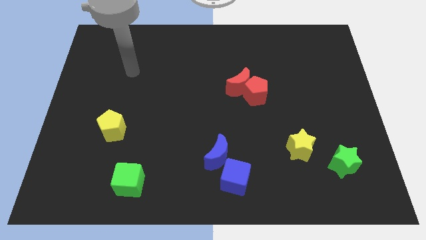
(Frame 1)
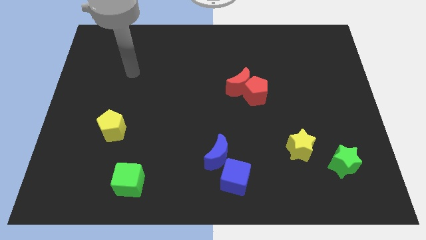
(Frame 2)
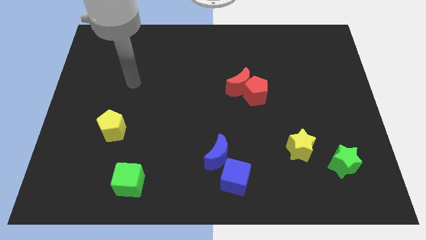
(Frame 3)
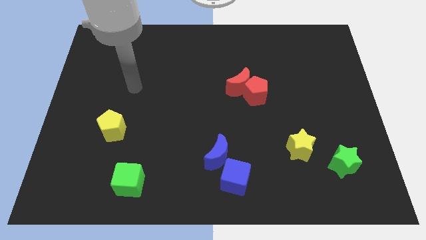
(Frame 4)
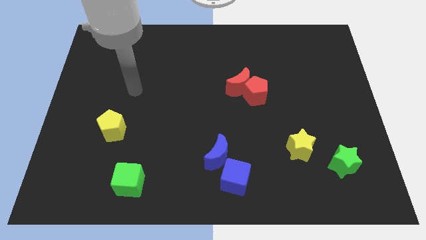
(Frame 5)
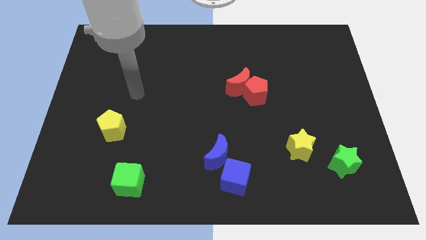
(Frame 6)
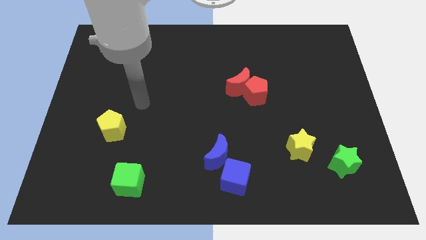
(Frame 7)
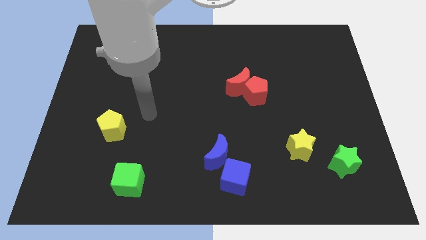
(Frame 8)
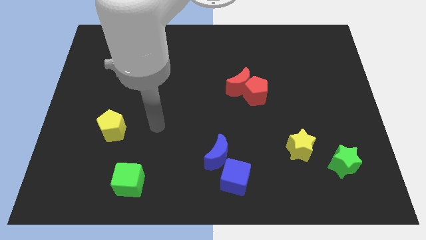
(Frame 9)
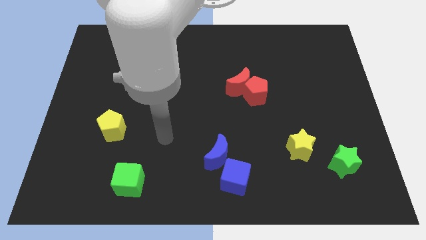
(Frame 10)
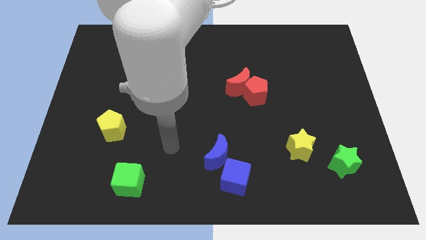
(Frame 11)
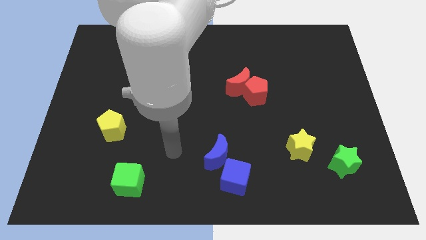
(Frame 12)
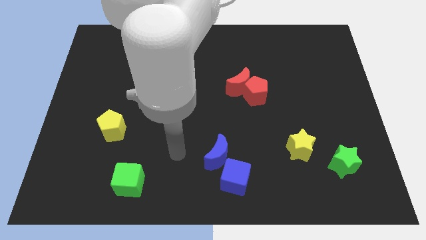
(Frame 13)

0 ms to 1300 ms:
point your arm between blue crescent and green cube

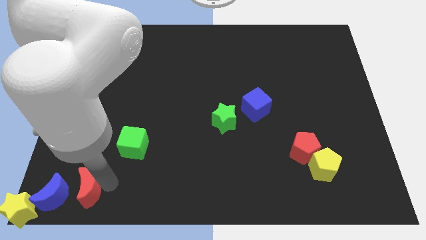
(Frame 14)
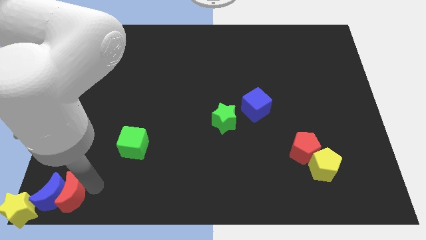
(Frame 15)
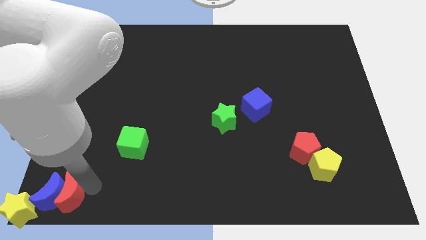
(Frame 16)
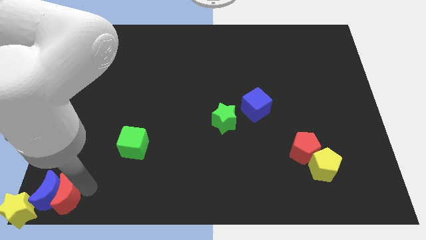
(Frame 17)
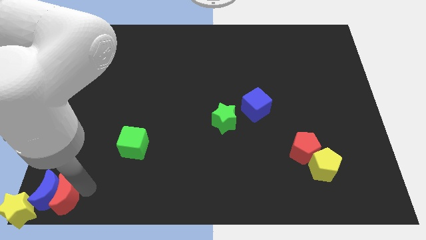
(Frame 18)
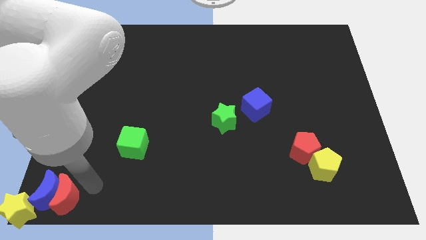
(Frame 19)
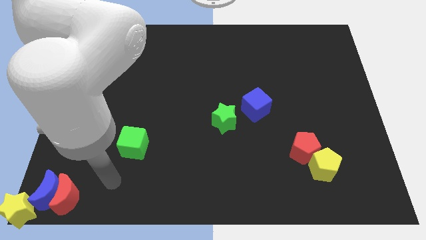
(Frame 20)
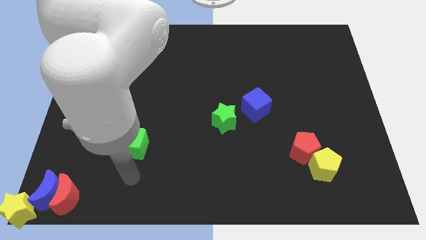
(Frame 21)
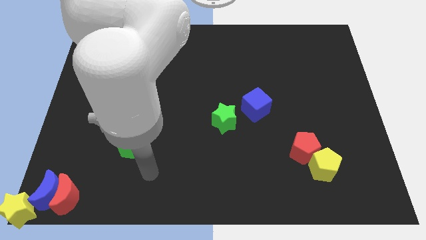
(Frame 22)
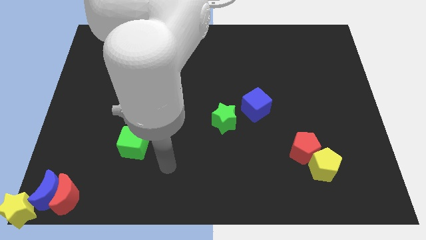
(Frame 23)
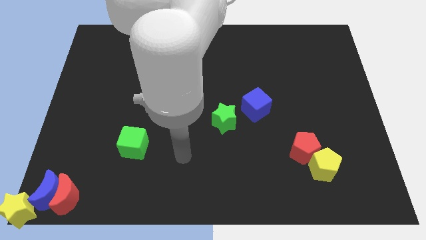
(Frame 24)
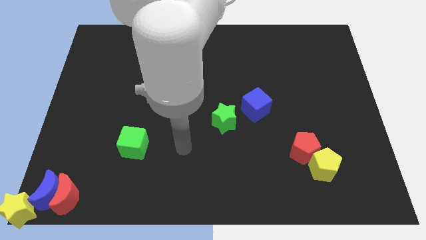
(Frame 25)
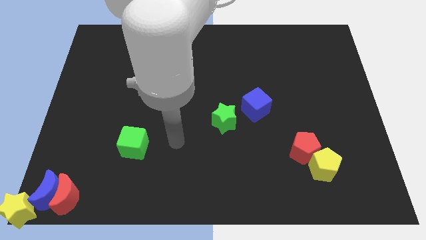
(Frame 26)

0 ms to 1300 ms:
push the red moon into the blue cube

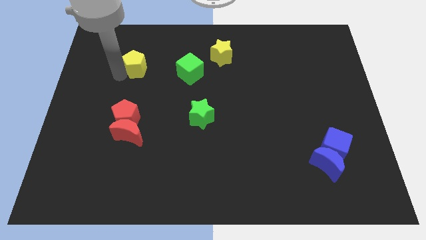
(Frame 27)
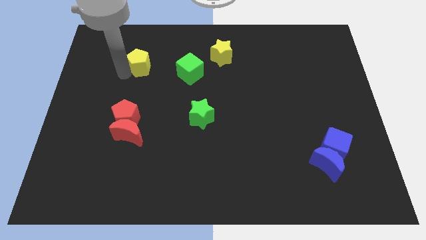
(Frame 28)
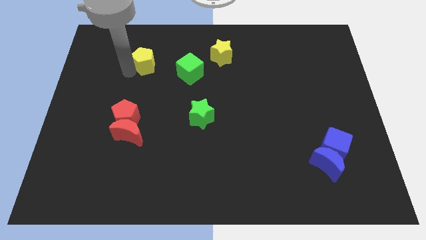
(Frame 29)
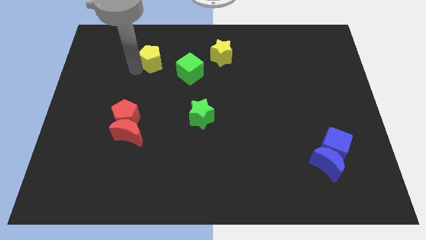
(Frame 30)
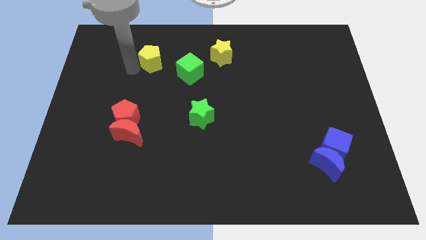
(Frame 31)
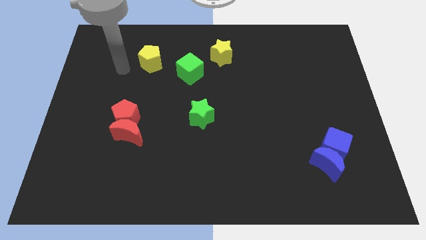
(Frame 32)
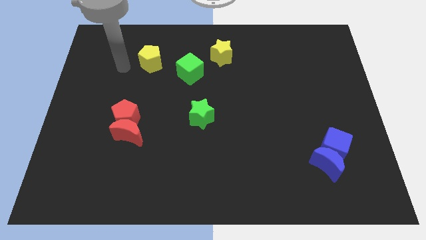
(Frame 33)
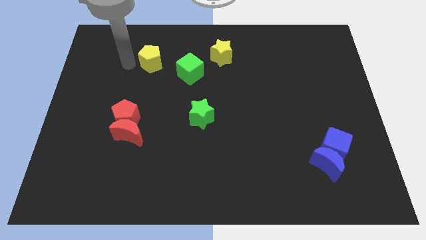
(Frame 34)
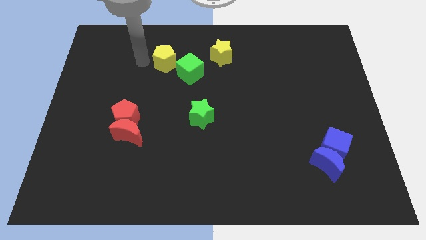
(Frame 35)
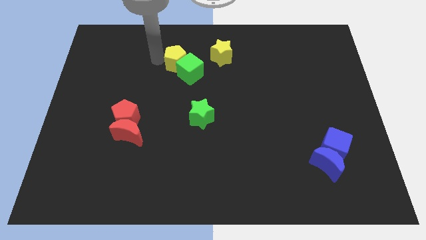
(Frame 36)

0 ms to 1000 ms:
place the yellow pentagon above the green cube

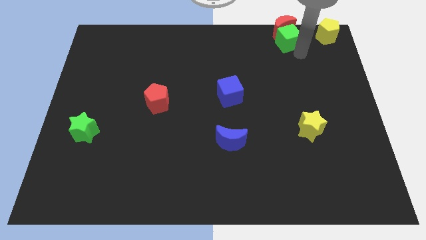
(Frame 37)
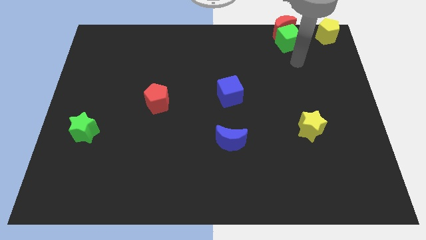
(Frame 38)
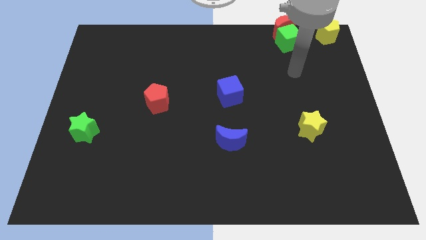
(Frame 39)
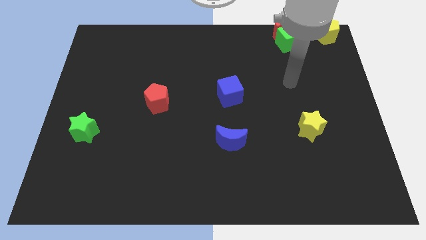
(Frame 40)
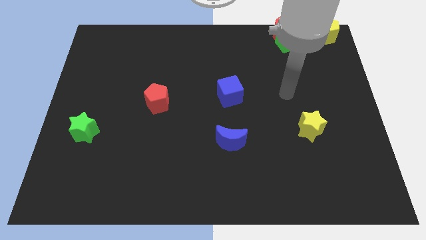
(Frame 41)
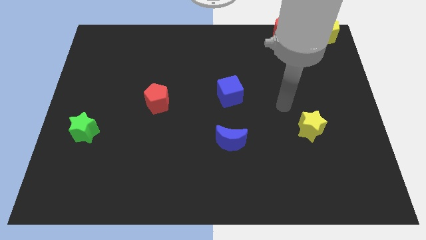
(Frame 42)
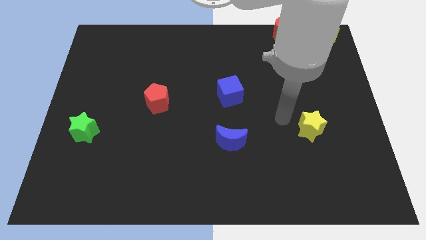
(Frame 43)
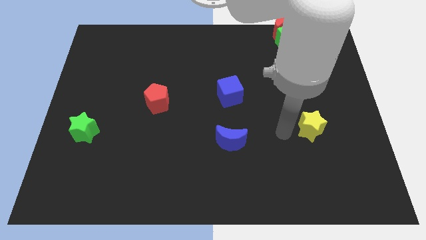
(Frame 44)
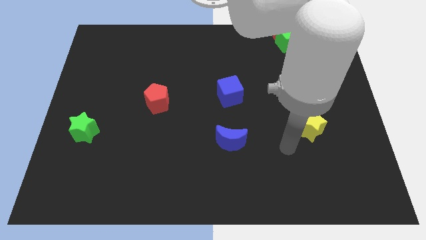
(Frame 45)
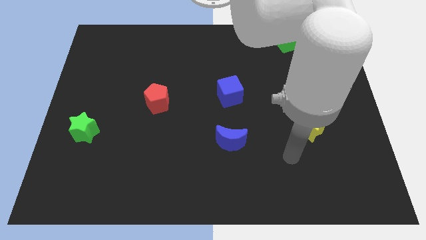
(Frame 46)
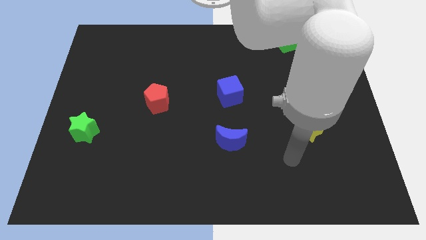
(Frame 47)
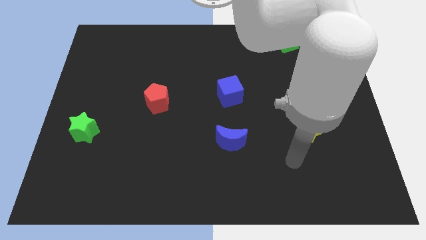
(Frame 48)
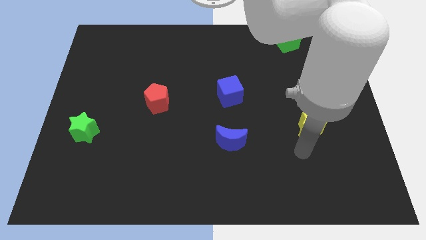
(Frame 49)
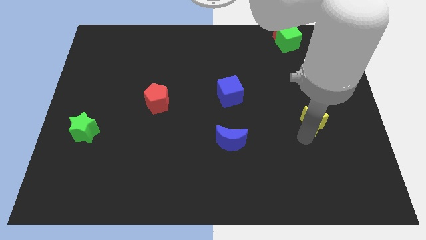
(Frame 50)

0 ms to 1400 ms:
move your hand towards the yellow star

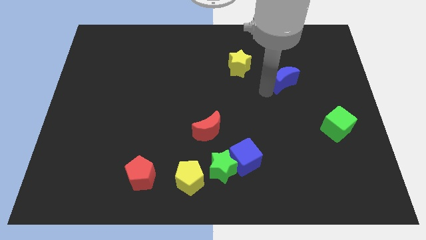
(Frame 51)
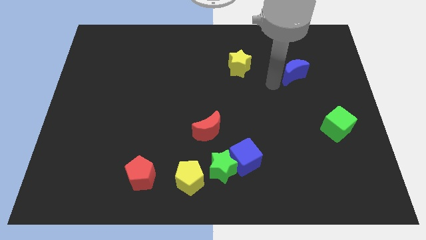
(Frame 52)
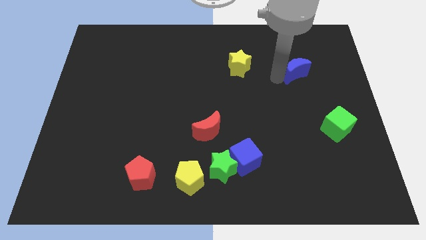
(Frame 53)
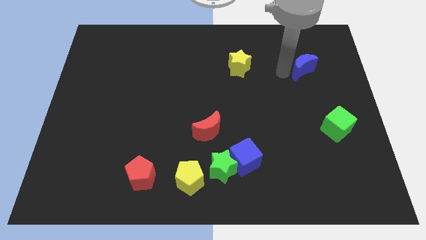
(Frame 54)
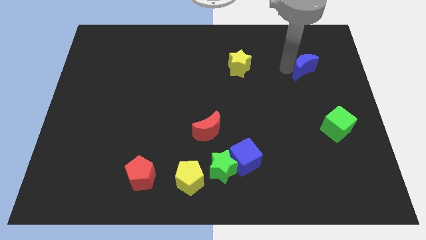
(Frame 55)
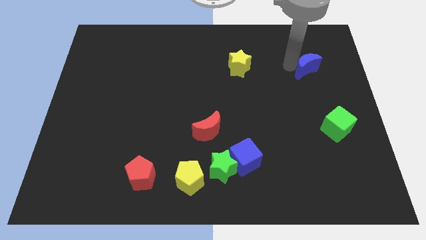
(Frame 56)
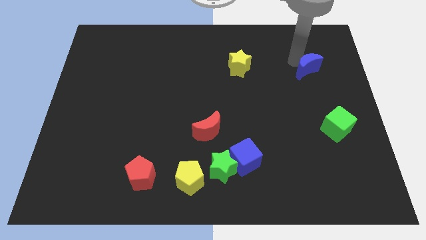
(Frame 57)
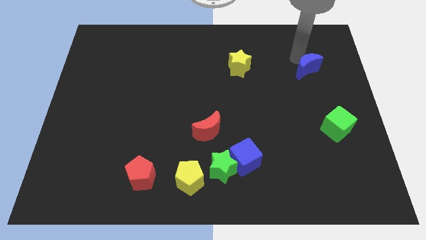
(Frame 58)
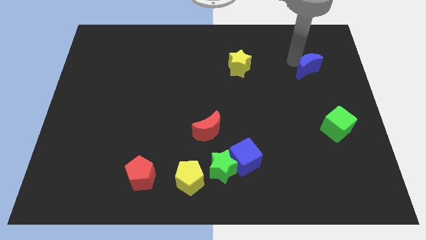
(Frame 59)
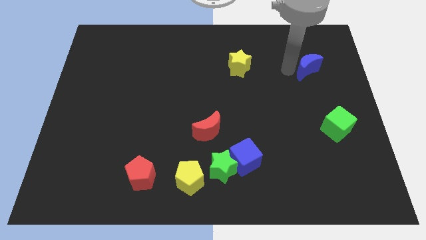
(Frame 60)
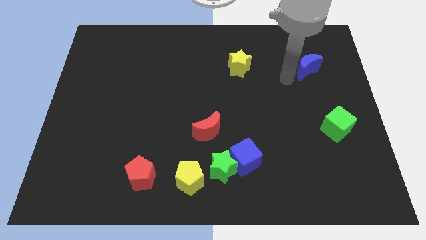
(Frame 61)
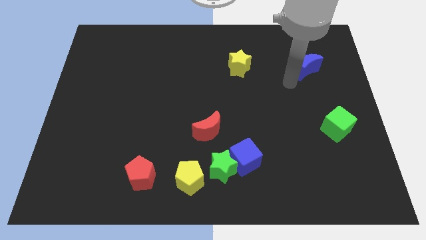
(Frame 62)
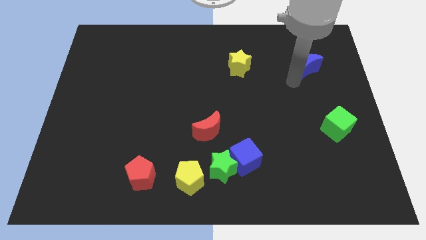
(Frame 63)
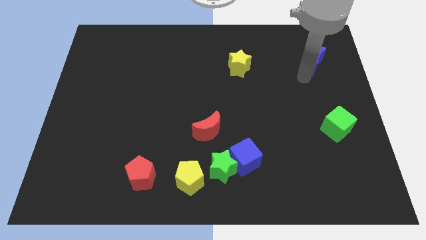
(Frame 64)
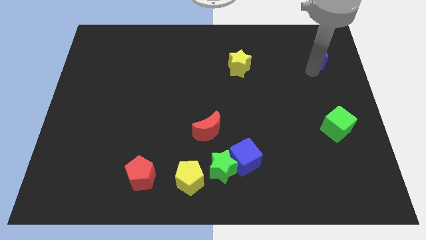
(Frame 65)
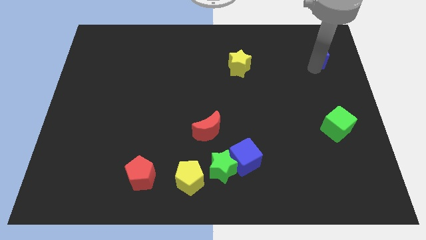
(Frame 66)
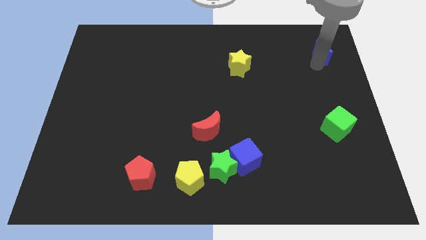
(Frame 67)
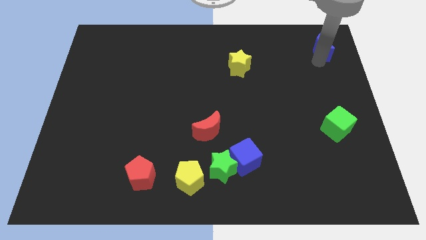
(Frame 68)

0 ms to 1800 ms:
push the blue crescent slightly towards the top right corner

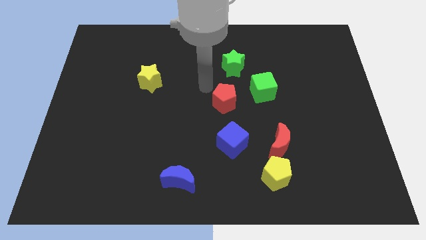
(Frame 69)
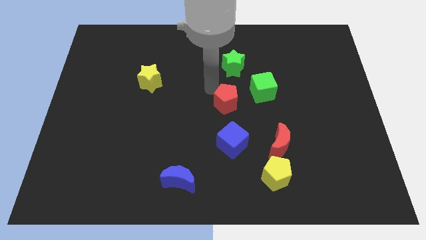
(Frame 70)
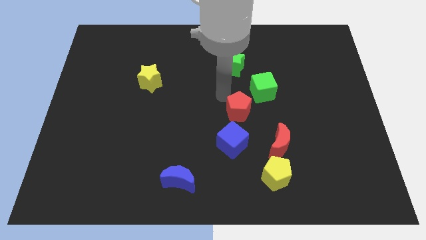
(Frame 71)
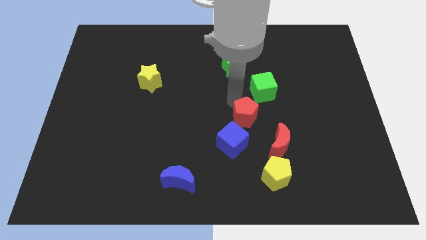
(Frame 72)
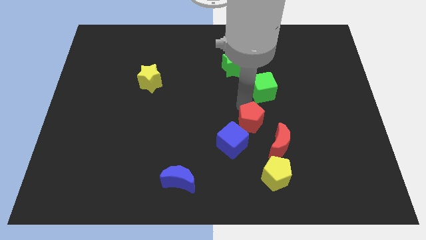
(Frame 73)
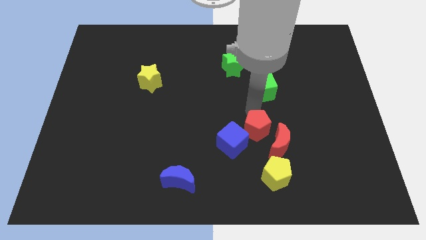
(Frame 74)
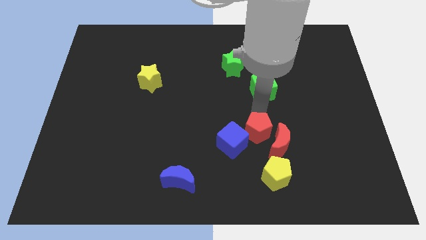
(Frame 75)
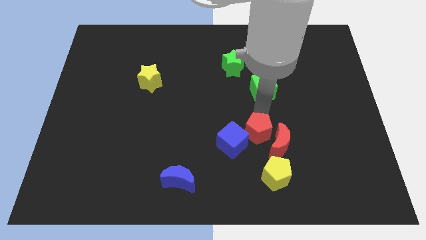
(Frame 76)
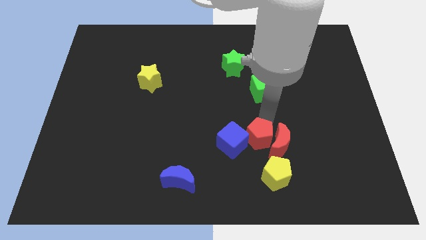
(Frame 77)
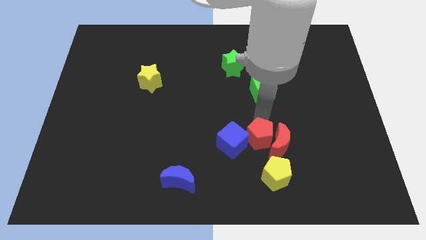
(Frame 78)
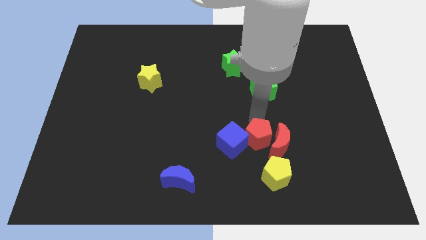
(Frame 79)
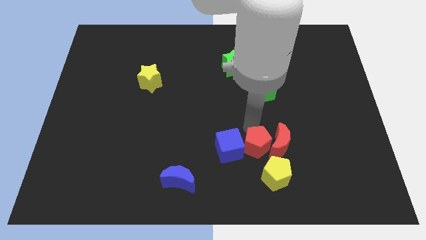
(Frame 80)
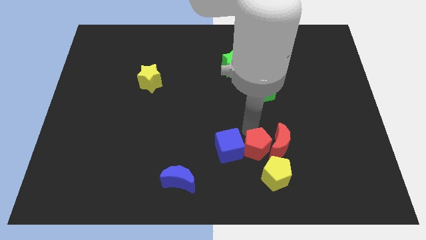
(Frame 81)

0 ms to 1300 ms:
place the red pentagon right to the blue cube

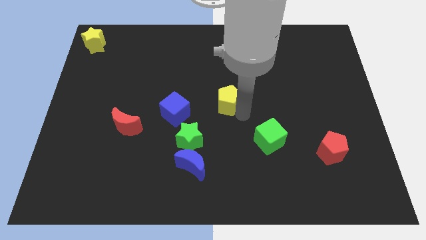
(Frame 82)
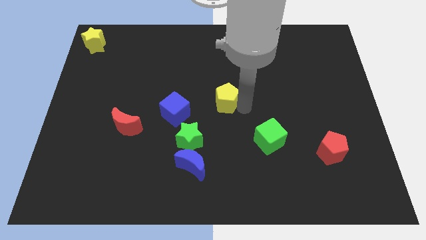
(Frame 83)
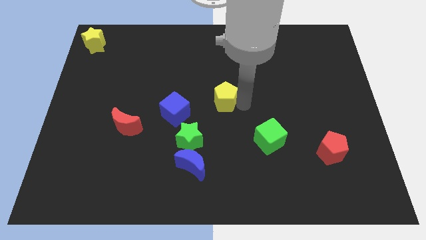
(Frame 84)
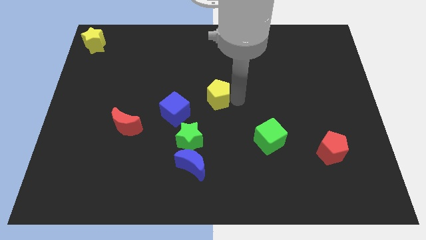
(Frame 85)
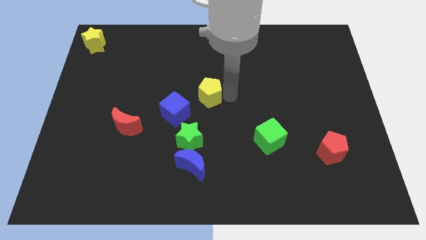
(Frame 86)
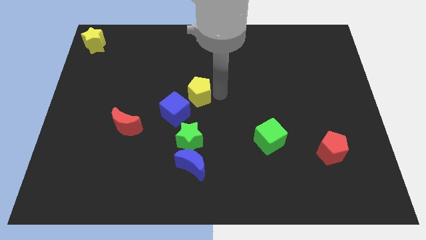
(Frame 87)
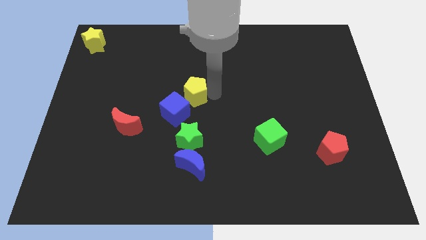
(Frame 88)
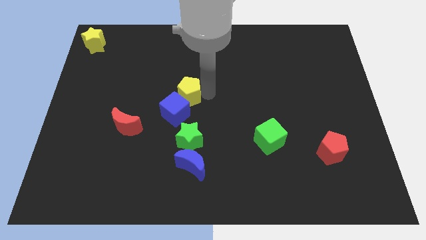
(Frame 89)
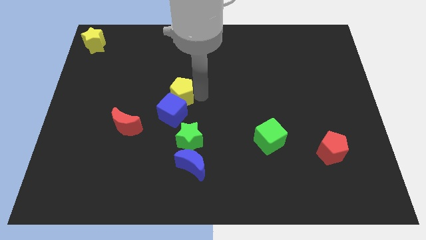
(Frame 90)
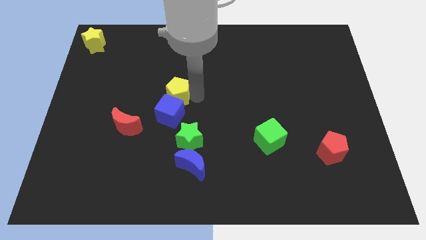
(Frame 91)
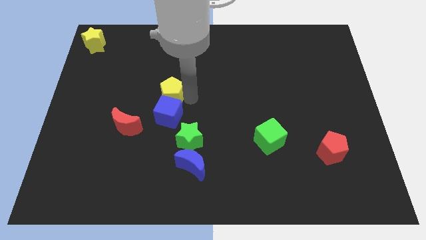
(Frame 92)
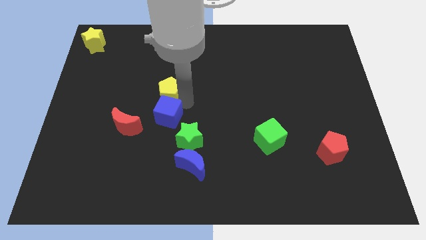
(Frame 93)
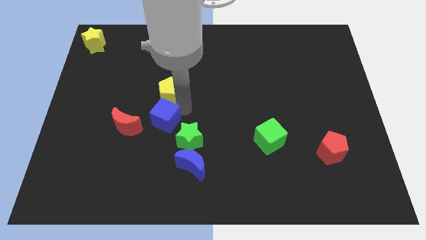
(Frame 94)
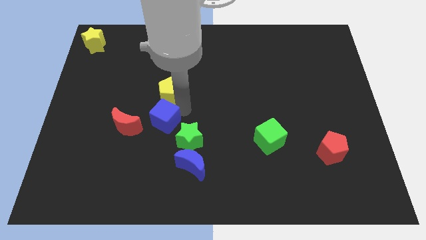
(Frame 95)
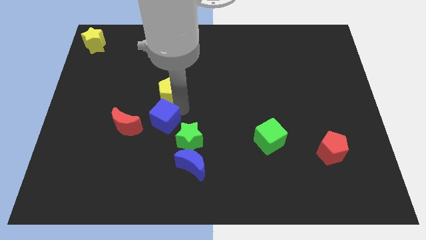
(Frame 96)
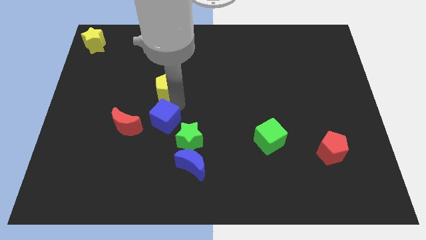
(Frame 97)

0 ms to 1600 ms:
place the yellow pentagon to the top of blue cube
